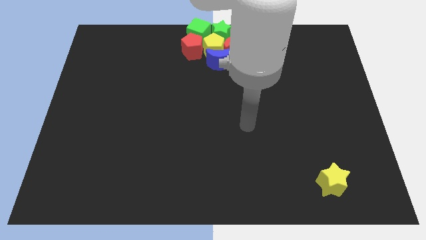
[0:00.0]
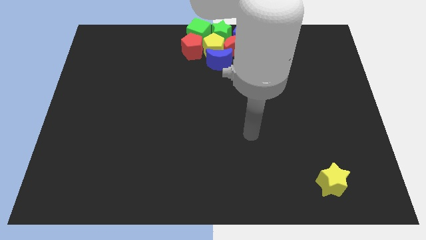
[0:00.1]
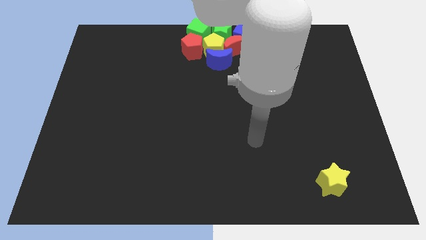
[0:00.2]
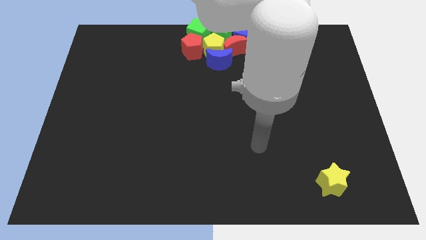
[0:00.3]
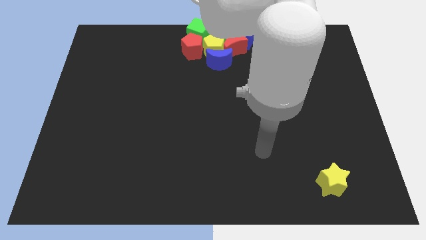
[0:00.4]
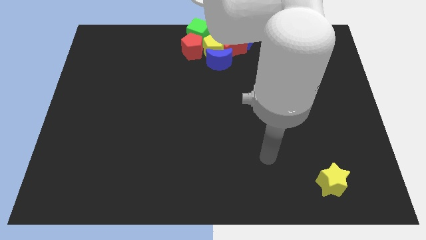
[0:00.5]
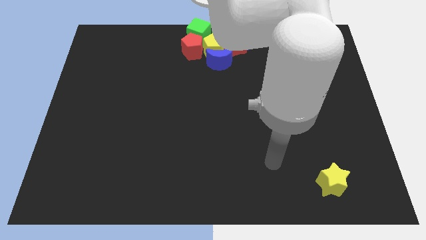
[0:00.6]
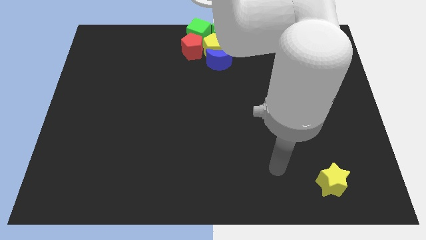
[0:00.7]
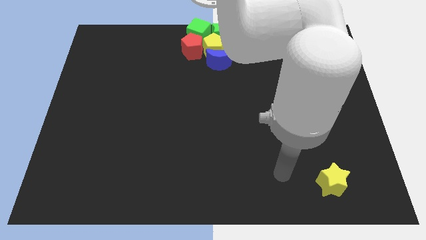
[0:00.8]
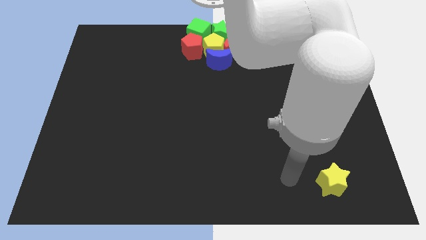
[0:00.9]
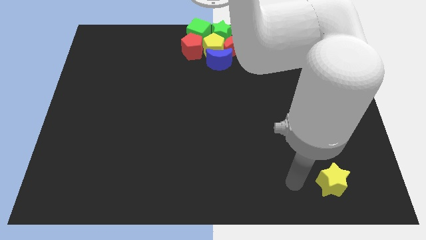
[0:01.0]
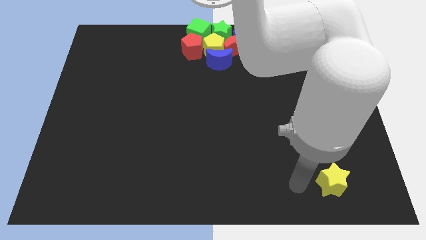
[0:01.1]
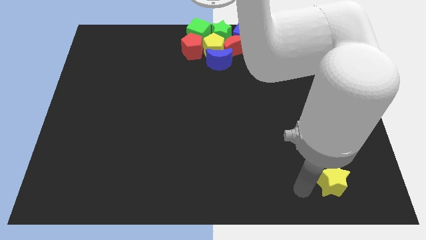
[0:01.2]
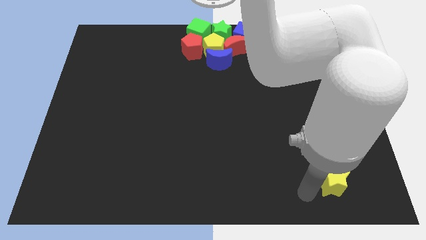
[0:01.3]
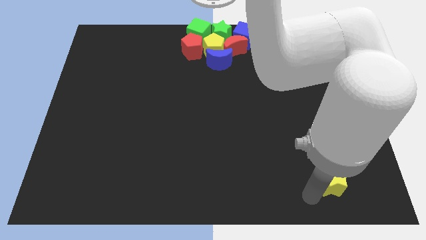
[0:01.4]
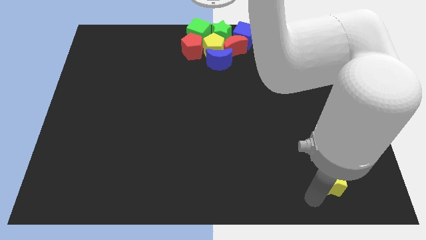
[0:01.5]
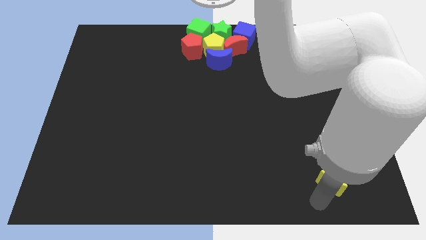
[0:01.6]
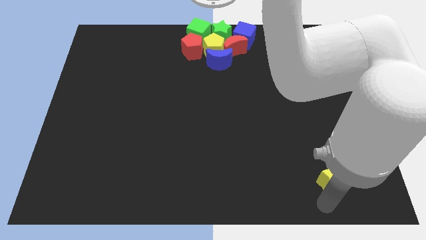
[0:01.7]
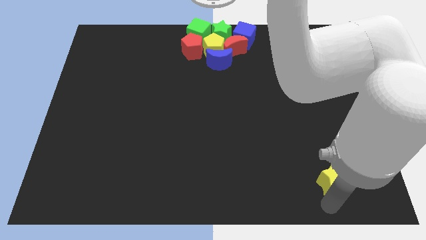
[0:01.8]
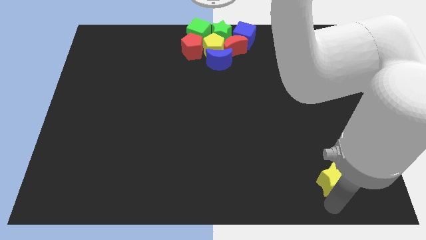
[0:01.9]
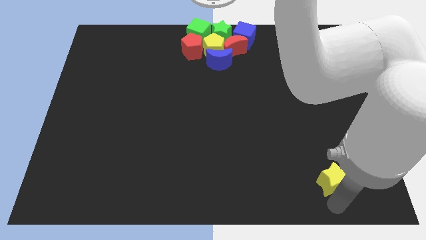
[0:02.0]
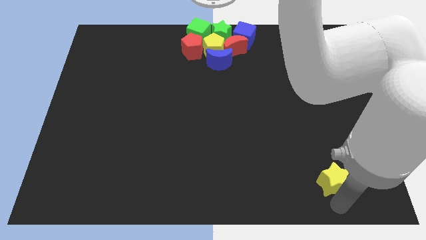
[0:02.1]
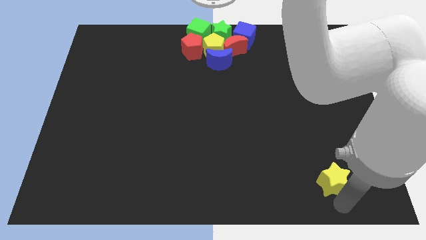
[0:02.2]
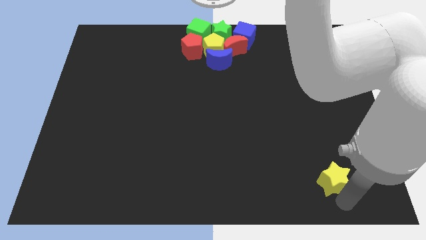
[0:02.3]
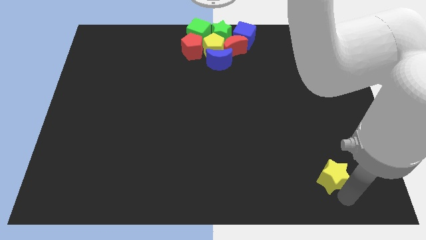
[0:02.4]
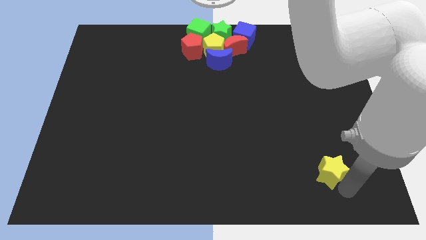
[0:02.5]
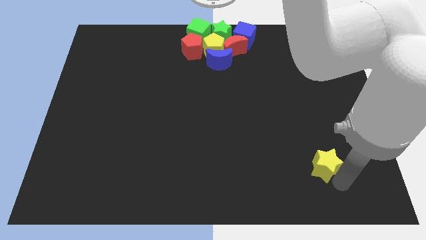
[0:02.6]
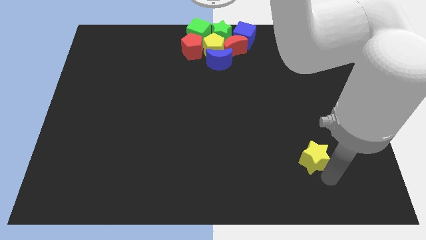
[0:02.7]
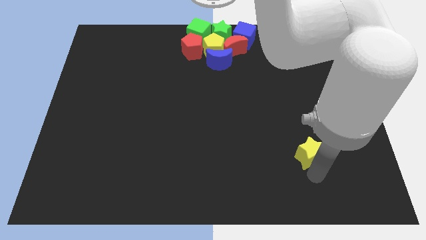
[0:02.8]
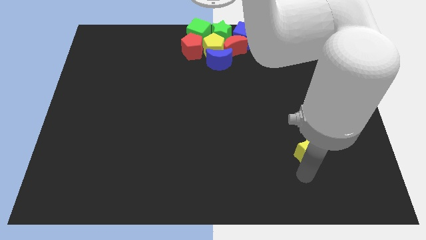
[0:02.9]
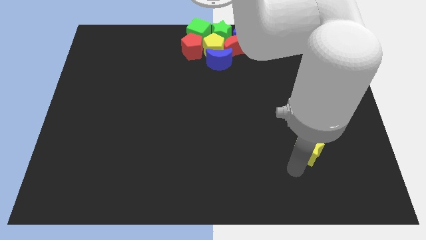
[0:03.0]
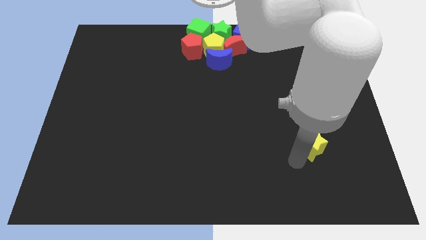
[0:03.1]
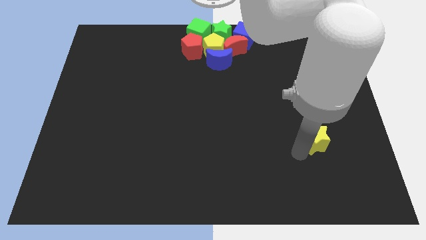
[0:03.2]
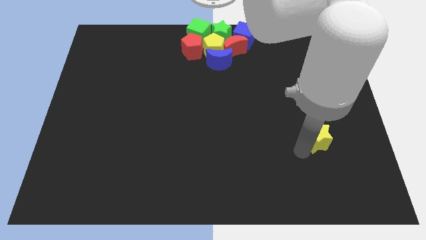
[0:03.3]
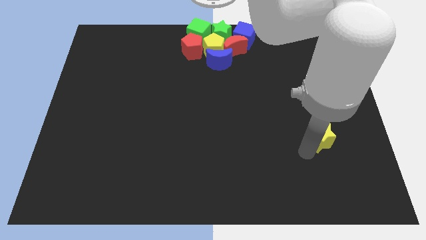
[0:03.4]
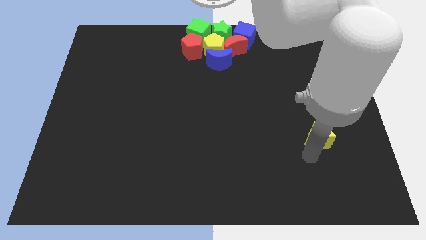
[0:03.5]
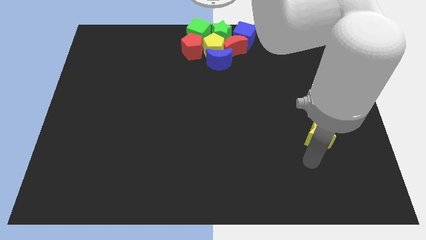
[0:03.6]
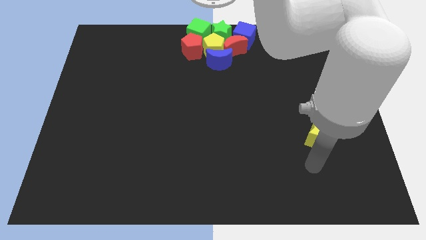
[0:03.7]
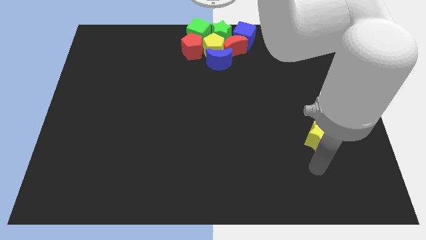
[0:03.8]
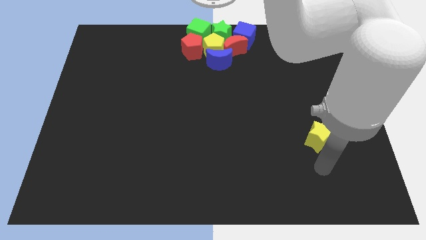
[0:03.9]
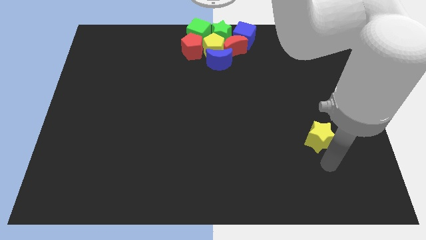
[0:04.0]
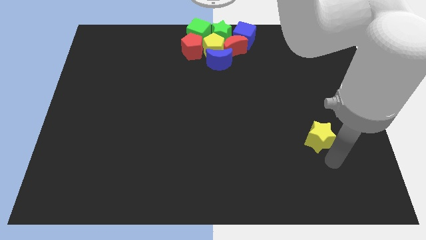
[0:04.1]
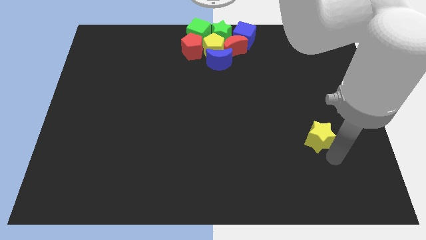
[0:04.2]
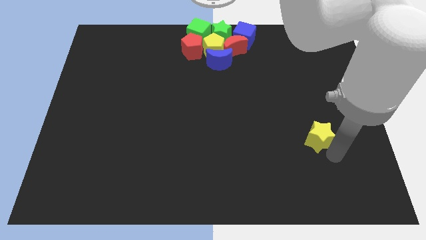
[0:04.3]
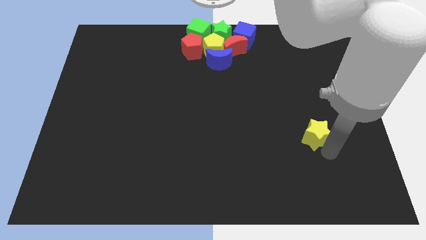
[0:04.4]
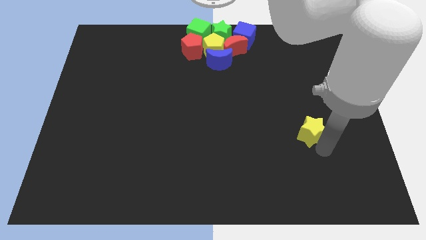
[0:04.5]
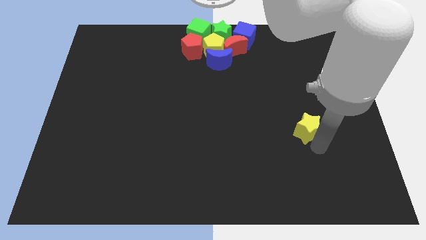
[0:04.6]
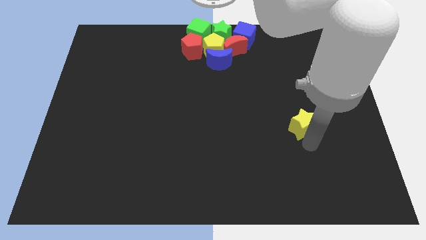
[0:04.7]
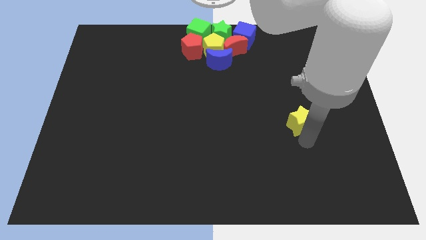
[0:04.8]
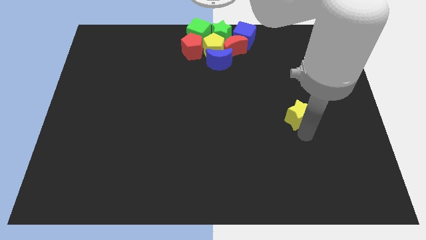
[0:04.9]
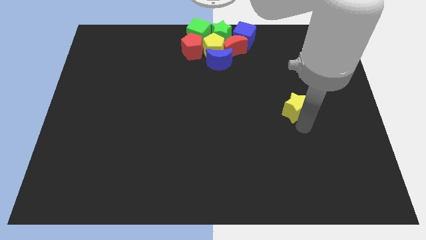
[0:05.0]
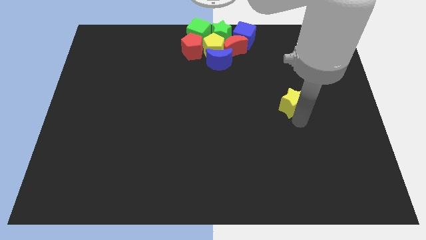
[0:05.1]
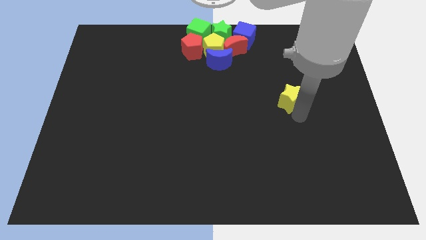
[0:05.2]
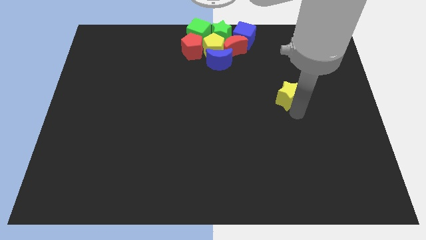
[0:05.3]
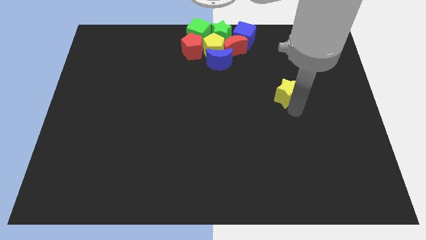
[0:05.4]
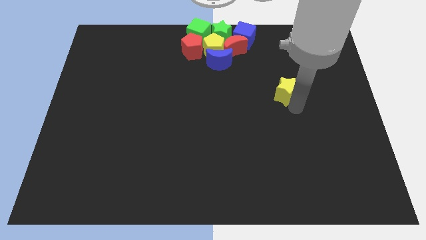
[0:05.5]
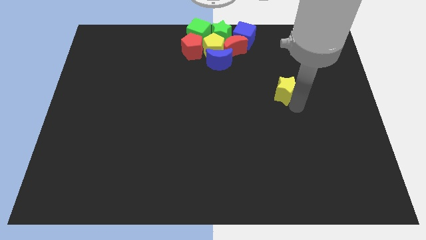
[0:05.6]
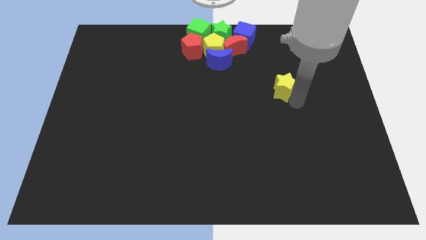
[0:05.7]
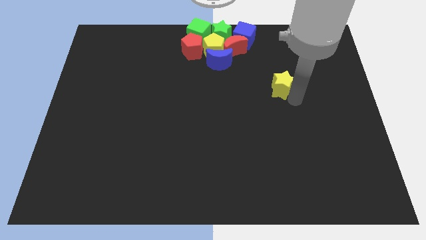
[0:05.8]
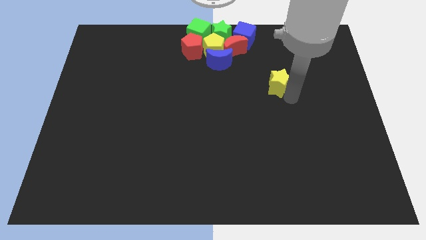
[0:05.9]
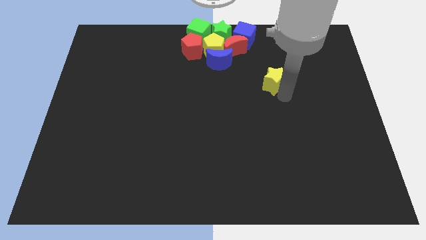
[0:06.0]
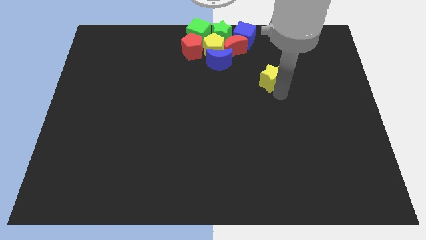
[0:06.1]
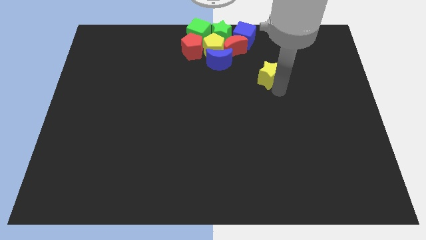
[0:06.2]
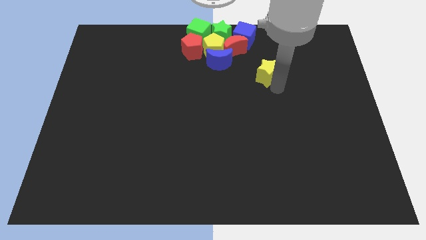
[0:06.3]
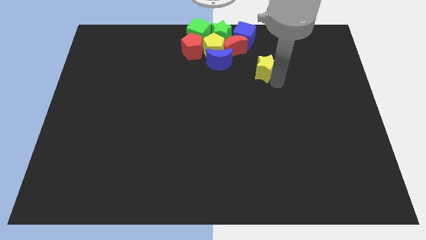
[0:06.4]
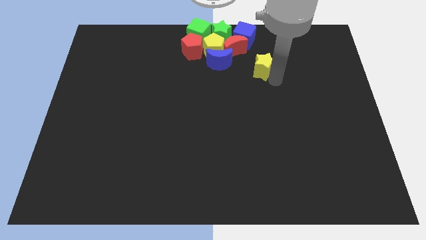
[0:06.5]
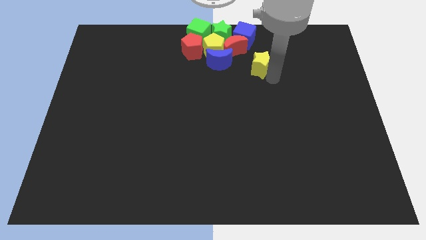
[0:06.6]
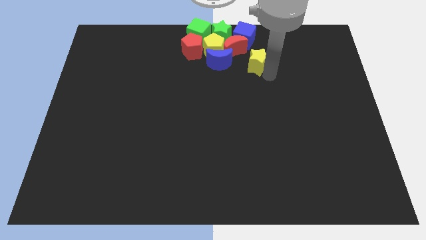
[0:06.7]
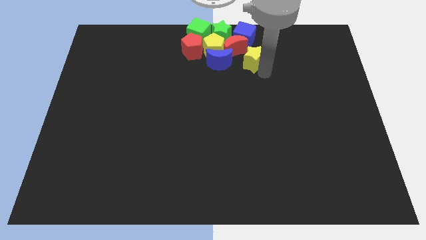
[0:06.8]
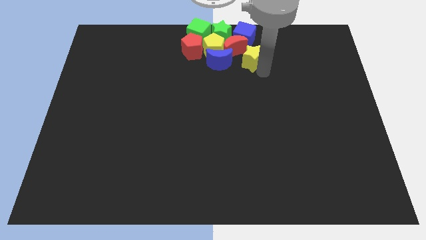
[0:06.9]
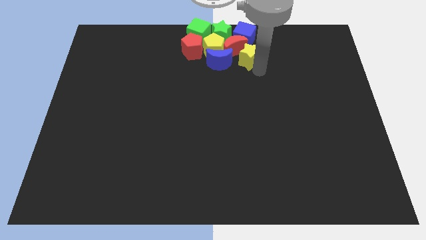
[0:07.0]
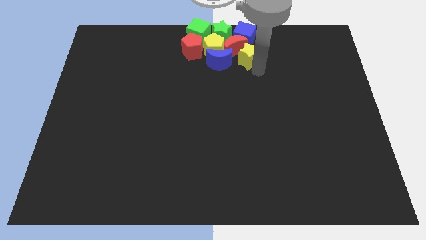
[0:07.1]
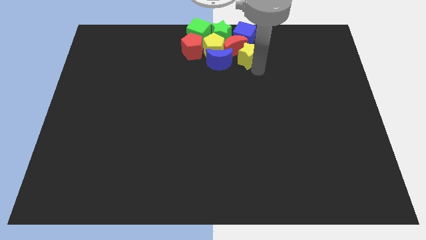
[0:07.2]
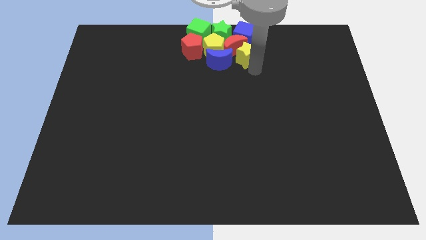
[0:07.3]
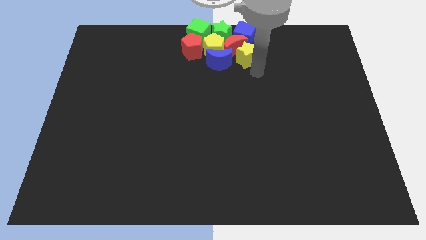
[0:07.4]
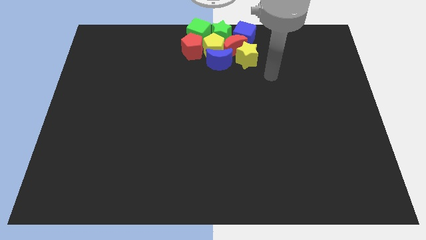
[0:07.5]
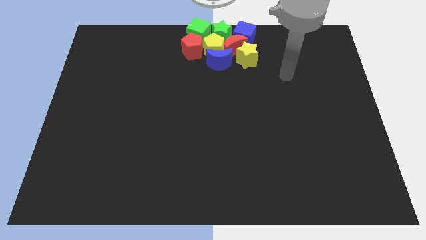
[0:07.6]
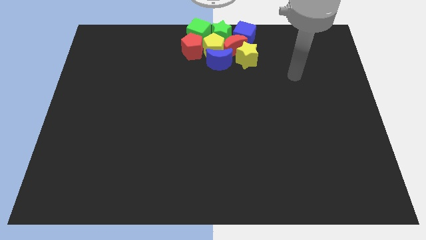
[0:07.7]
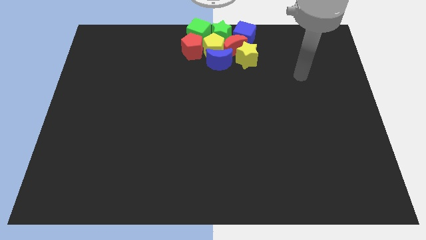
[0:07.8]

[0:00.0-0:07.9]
move the yellow star to the red crescent

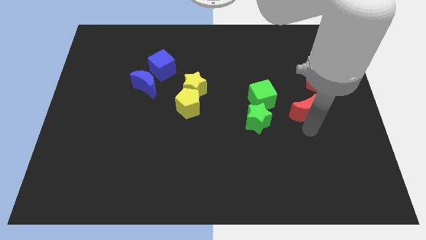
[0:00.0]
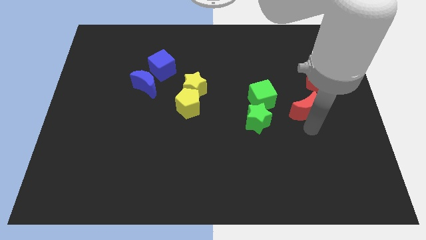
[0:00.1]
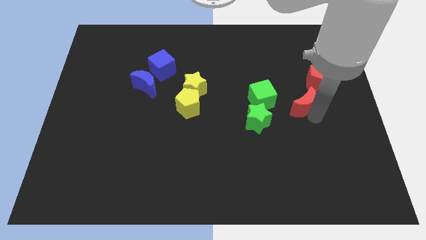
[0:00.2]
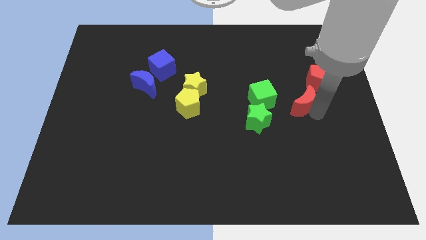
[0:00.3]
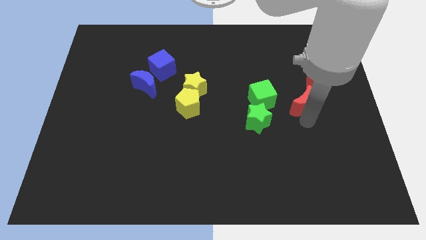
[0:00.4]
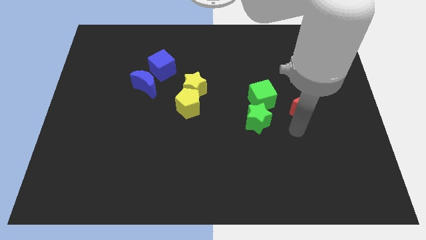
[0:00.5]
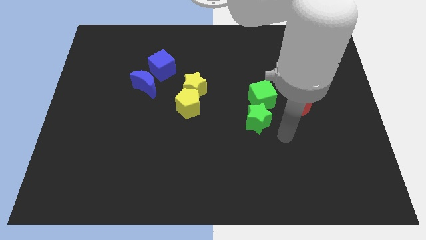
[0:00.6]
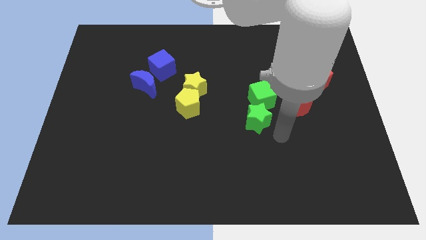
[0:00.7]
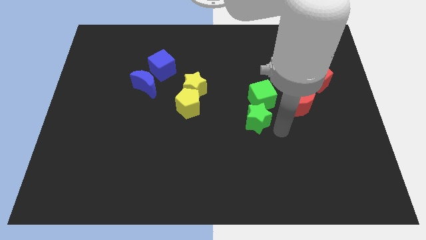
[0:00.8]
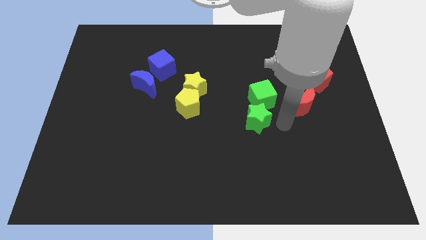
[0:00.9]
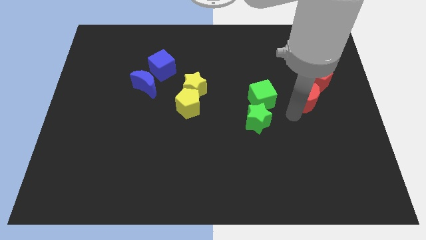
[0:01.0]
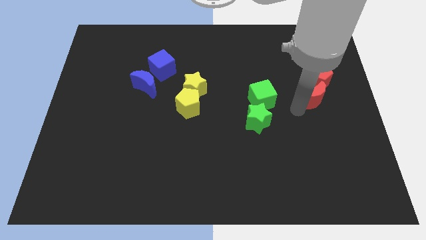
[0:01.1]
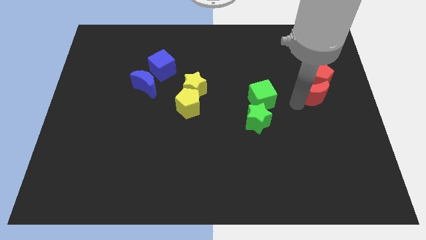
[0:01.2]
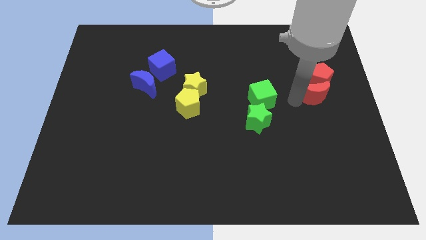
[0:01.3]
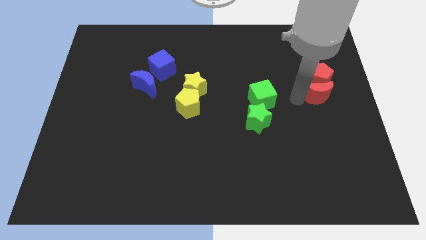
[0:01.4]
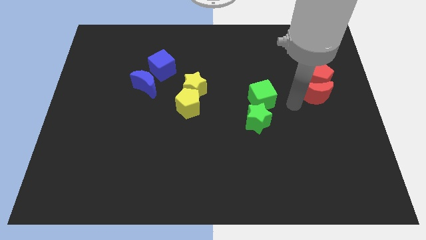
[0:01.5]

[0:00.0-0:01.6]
push the red moon into the red pentagon
